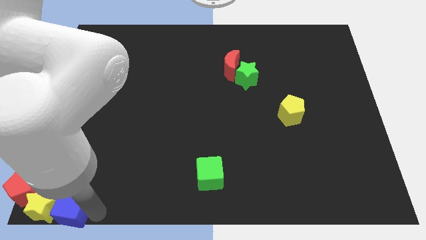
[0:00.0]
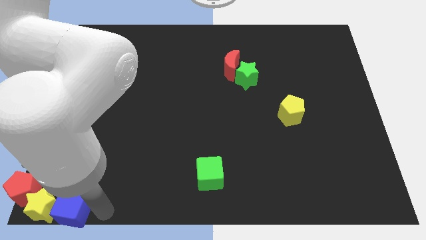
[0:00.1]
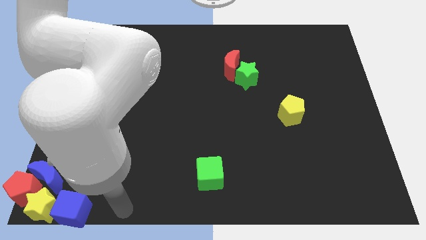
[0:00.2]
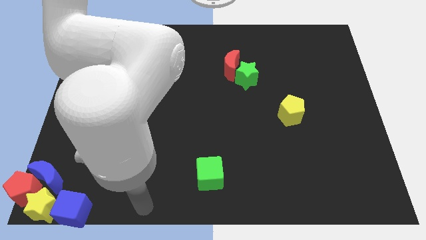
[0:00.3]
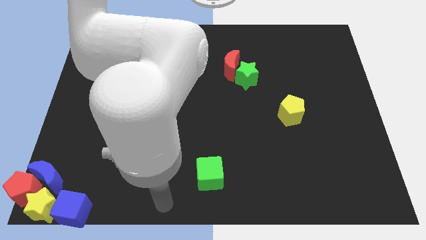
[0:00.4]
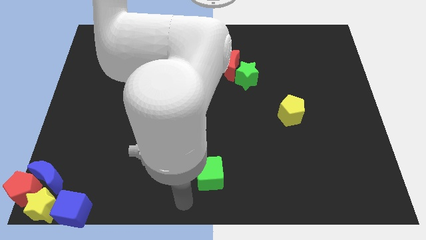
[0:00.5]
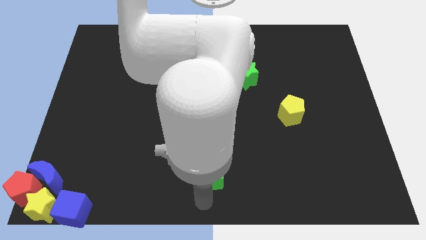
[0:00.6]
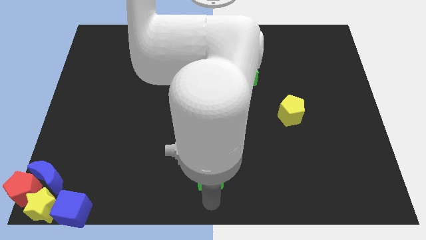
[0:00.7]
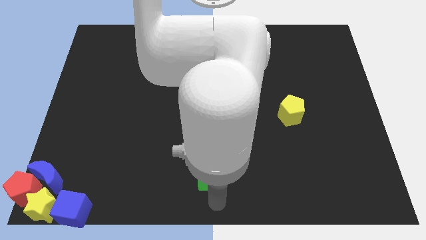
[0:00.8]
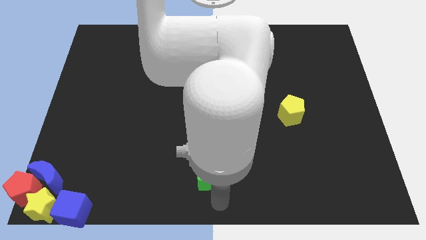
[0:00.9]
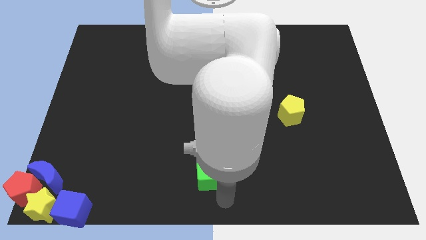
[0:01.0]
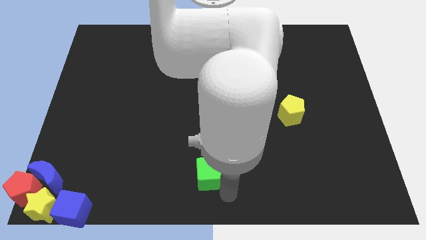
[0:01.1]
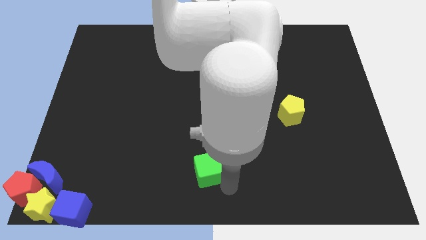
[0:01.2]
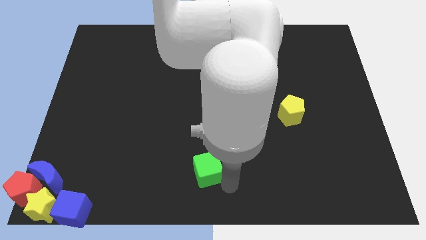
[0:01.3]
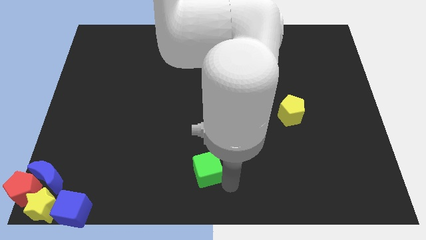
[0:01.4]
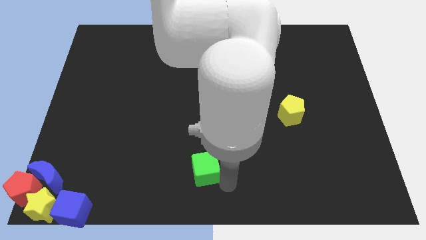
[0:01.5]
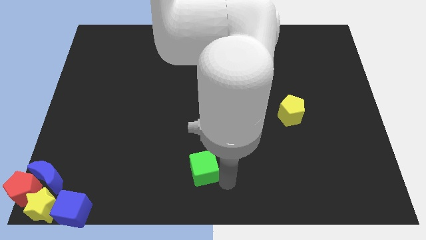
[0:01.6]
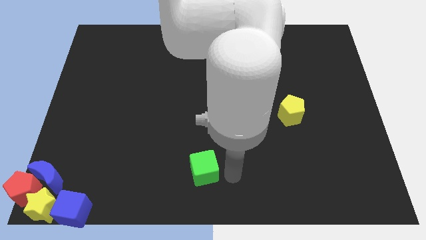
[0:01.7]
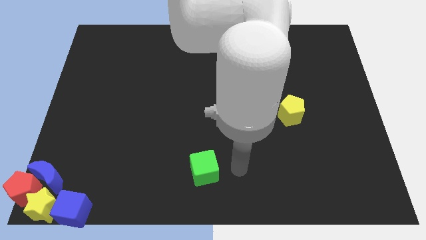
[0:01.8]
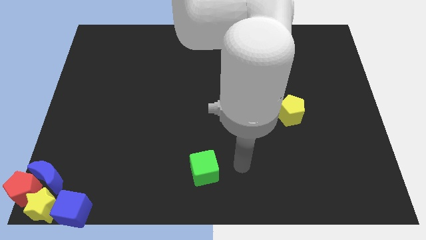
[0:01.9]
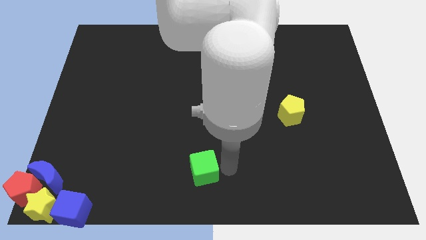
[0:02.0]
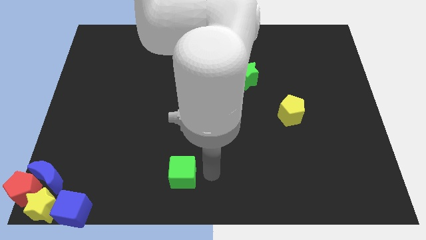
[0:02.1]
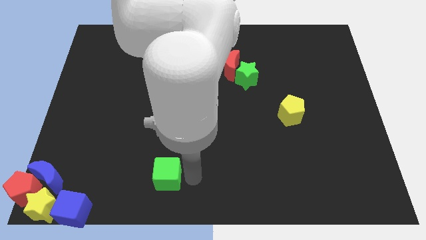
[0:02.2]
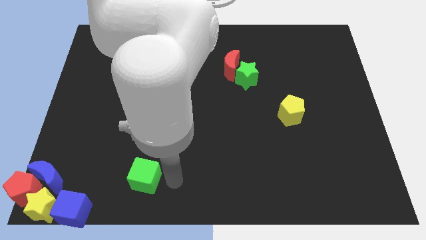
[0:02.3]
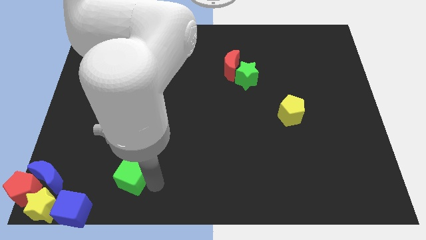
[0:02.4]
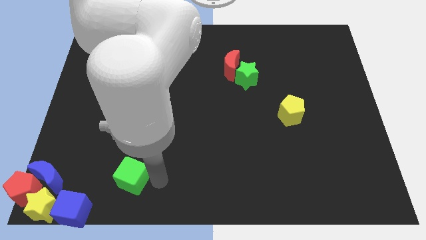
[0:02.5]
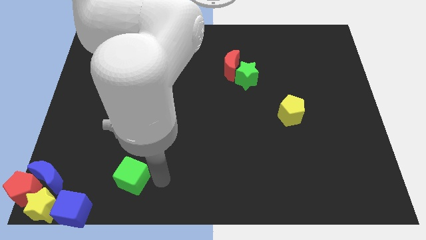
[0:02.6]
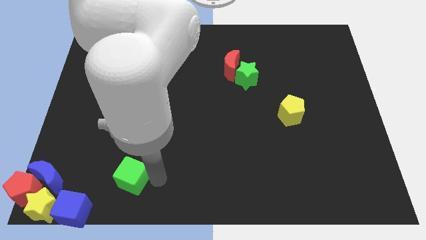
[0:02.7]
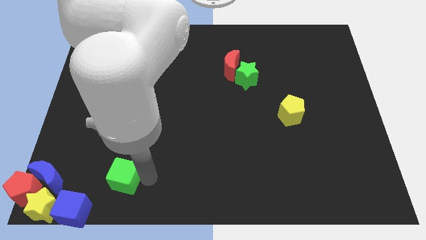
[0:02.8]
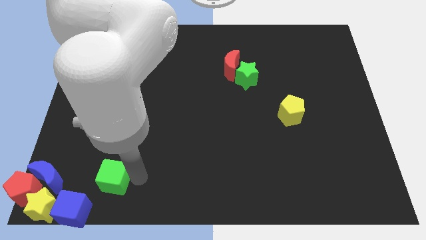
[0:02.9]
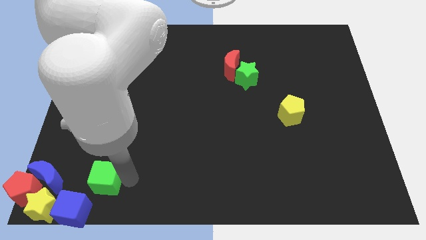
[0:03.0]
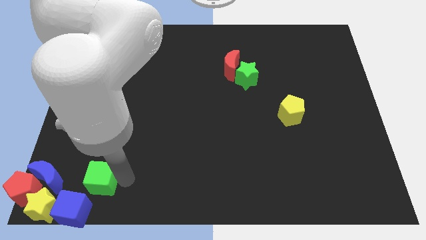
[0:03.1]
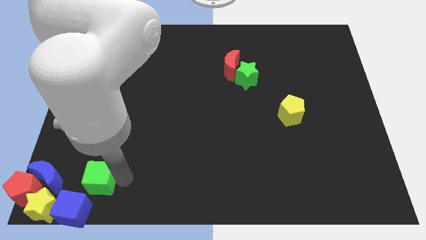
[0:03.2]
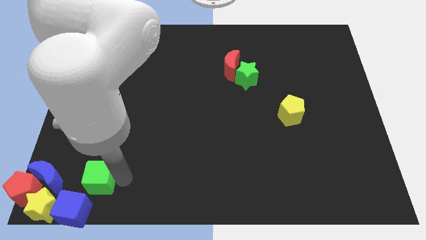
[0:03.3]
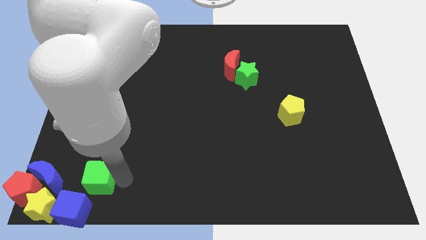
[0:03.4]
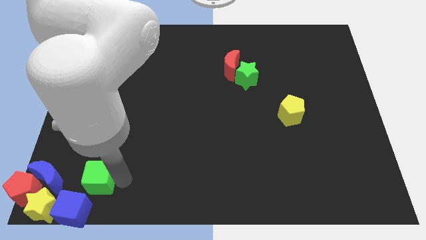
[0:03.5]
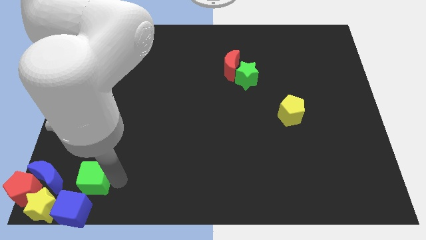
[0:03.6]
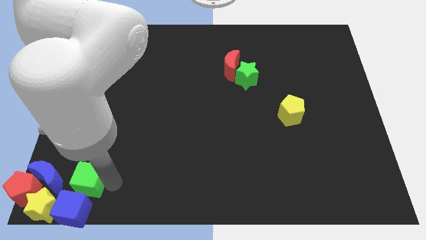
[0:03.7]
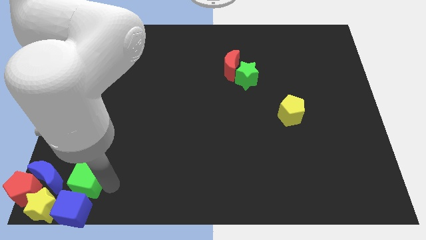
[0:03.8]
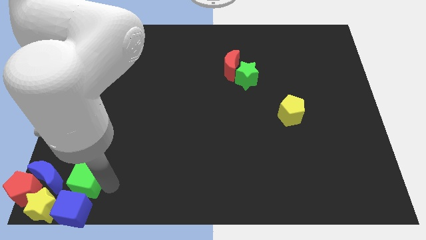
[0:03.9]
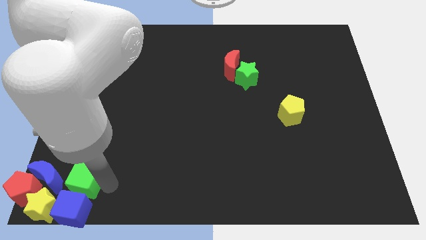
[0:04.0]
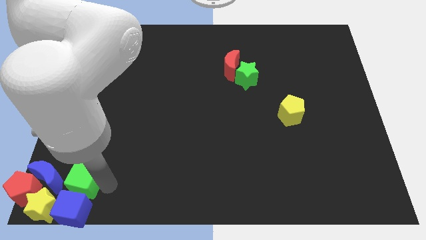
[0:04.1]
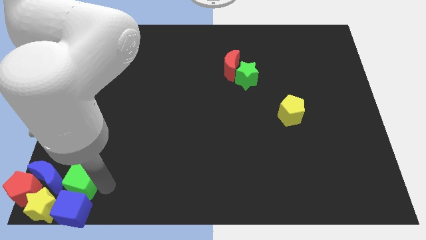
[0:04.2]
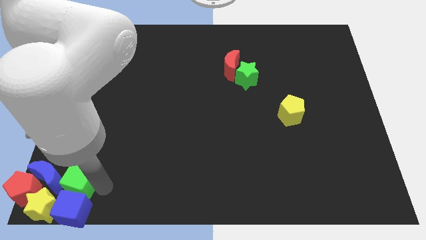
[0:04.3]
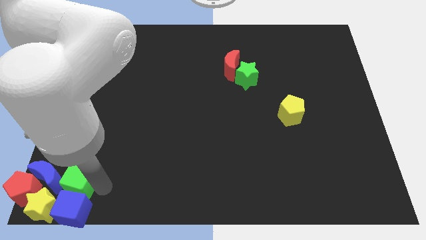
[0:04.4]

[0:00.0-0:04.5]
slide the green cube into the top side of the blue cube

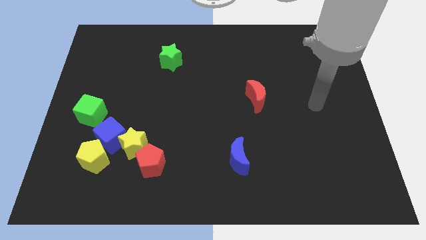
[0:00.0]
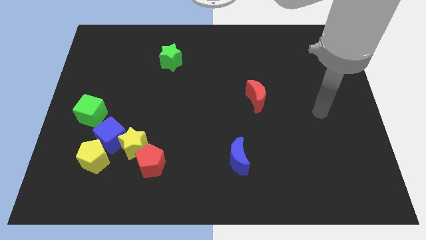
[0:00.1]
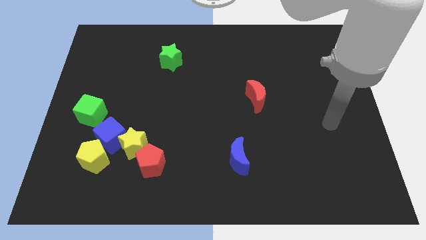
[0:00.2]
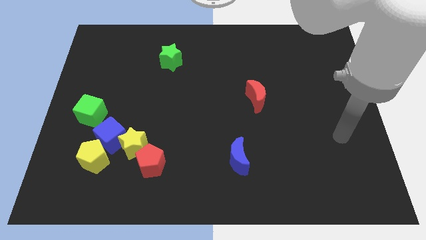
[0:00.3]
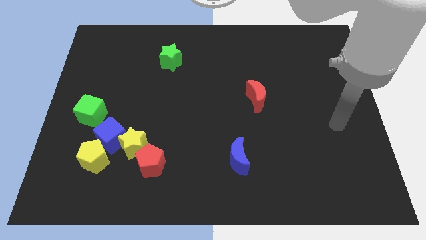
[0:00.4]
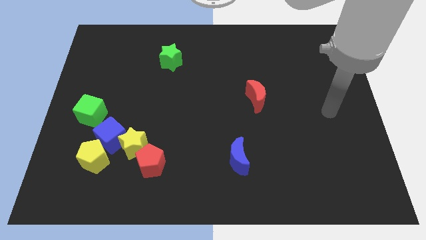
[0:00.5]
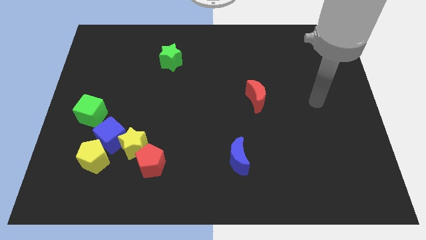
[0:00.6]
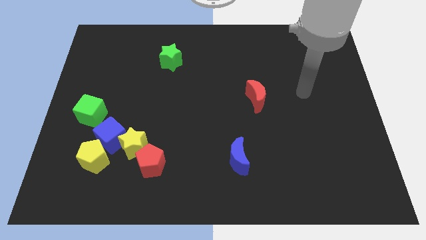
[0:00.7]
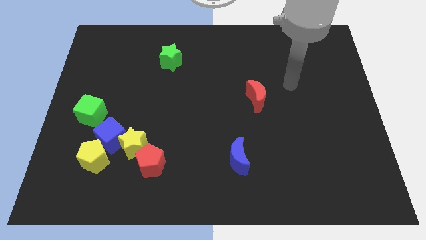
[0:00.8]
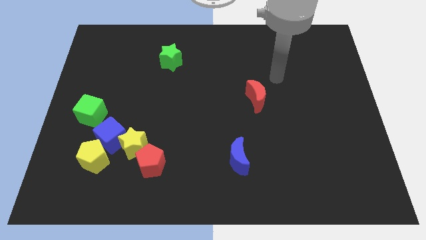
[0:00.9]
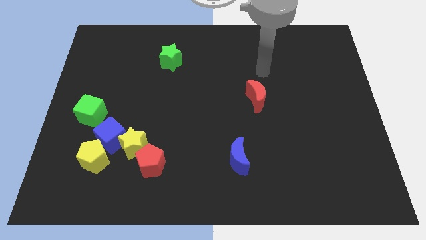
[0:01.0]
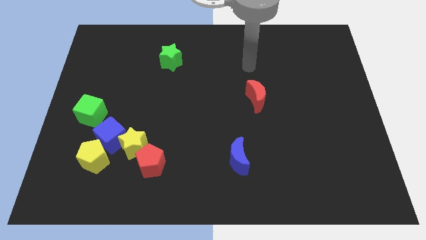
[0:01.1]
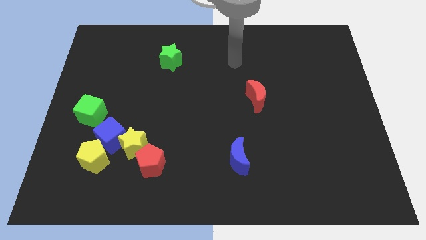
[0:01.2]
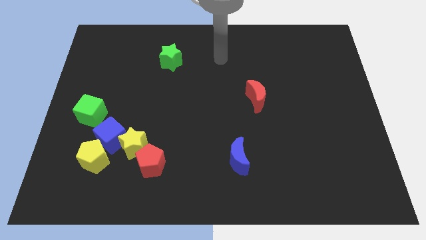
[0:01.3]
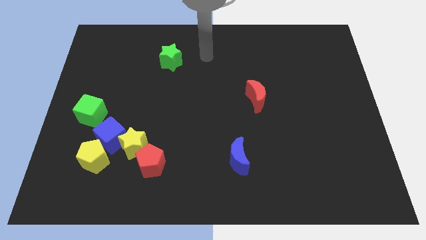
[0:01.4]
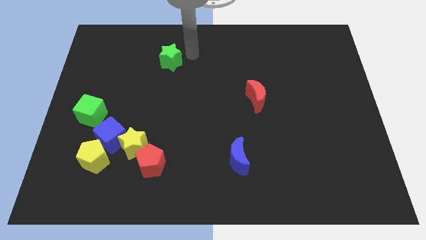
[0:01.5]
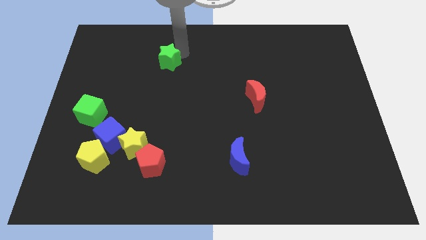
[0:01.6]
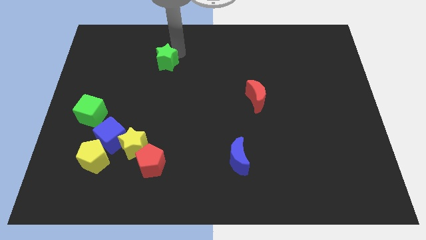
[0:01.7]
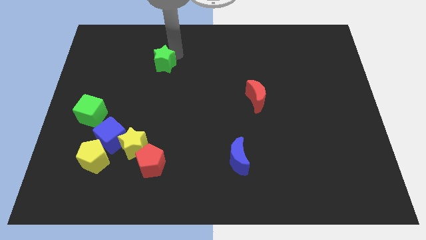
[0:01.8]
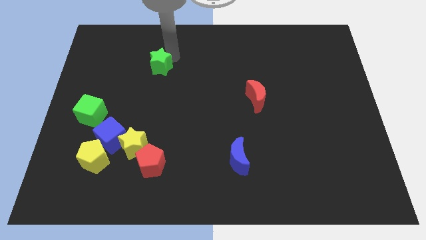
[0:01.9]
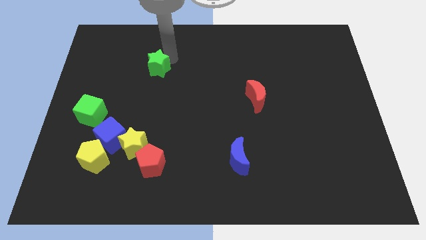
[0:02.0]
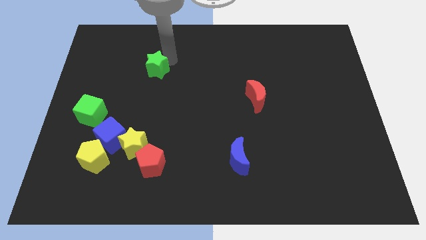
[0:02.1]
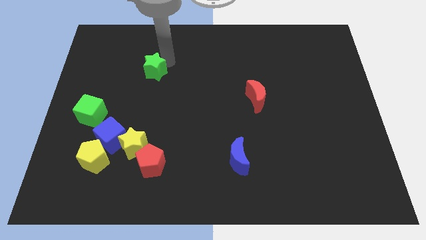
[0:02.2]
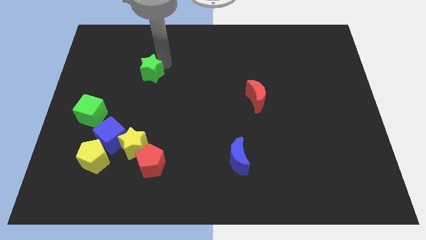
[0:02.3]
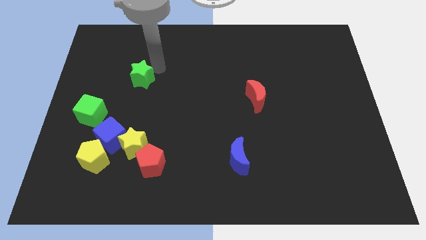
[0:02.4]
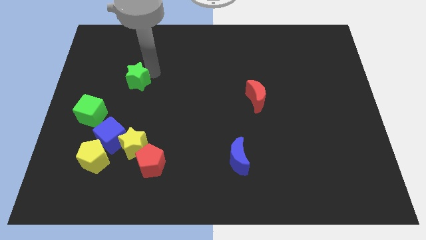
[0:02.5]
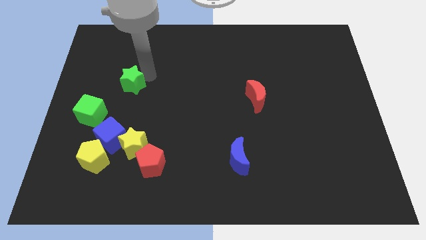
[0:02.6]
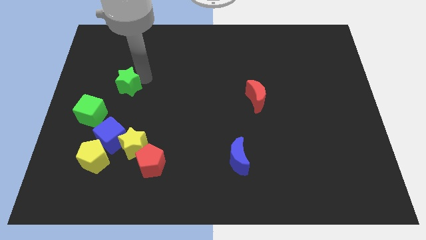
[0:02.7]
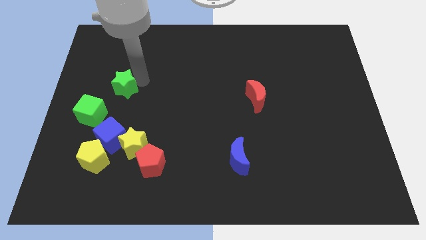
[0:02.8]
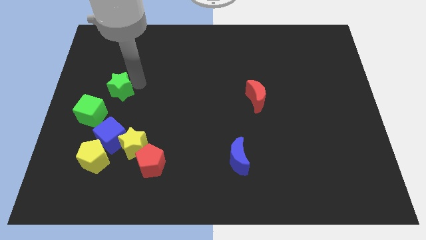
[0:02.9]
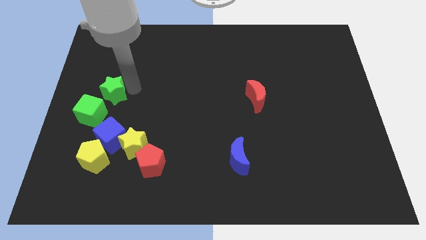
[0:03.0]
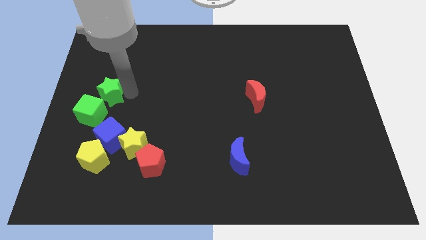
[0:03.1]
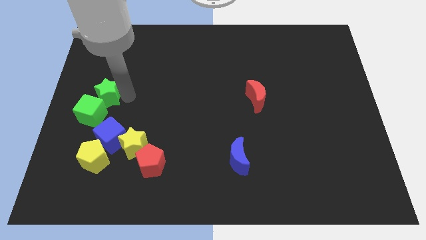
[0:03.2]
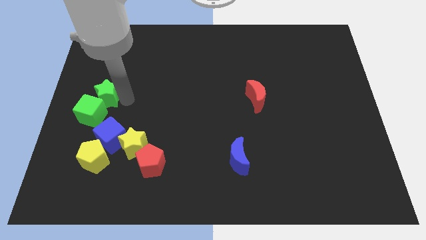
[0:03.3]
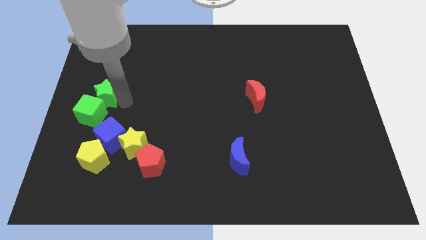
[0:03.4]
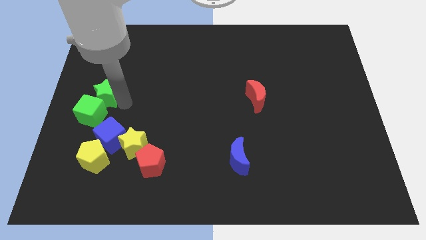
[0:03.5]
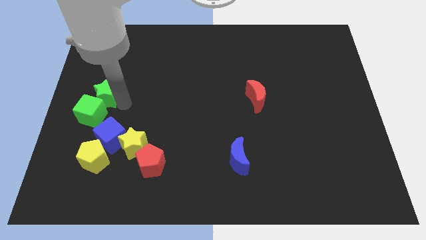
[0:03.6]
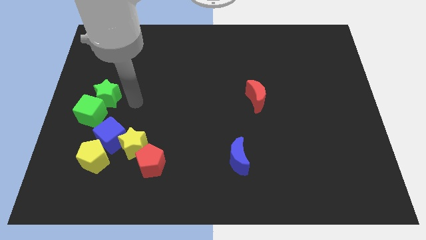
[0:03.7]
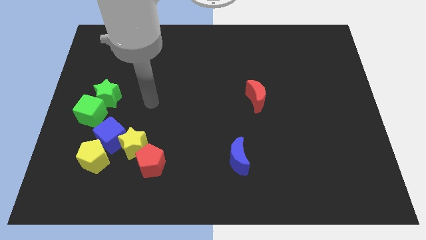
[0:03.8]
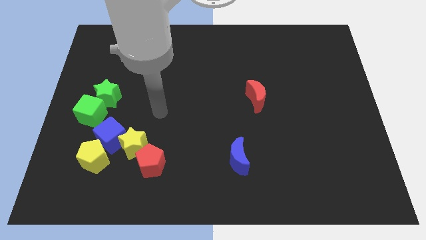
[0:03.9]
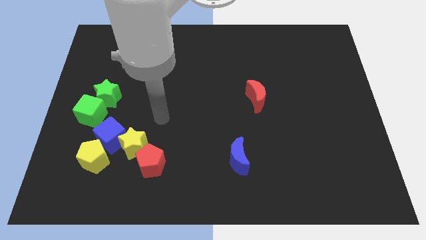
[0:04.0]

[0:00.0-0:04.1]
put the green blocks together at the left side of the table

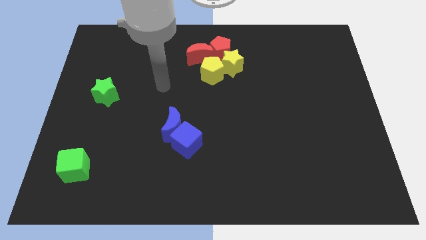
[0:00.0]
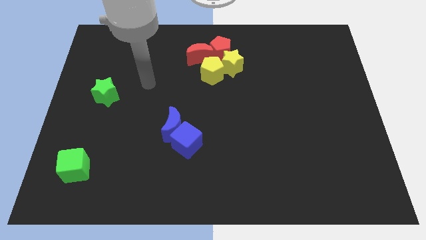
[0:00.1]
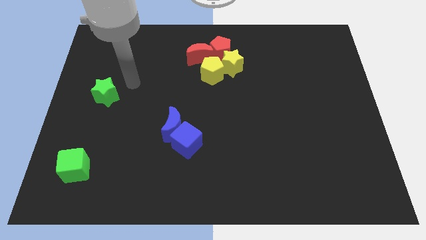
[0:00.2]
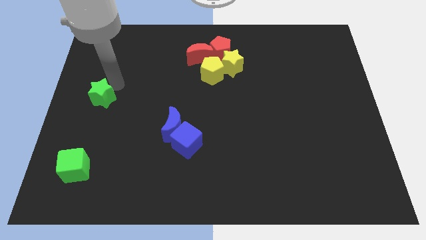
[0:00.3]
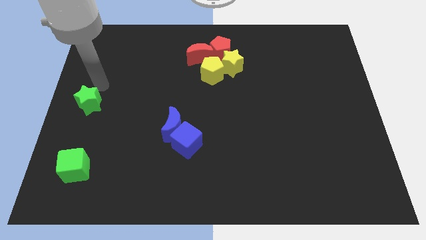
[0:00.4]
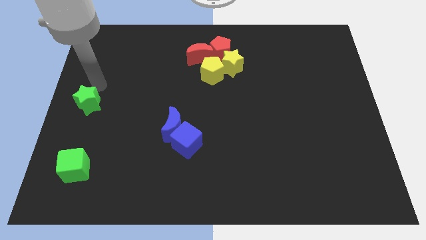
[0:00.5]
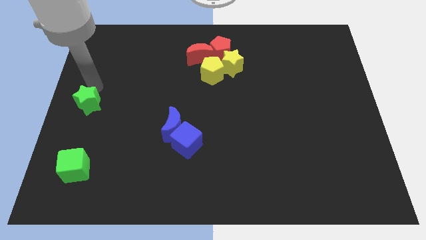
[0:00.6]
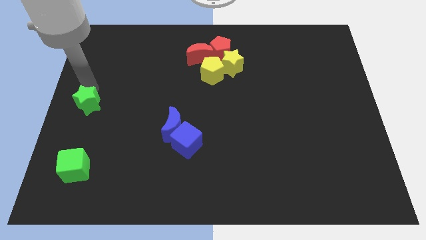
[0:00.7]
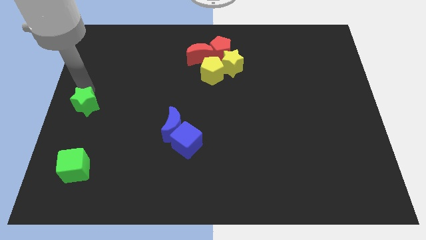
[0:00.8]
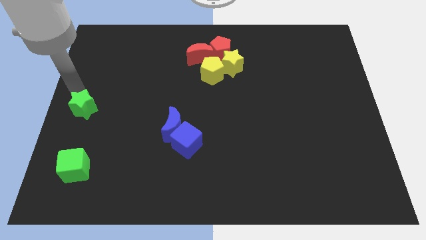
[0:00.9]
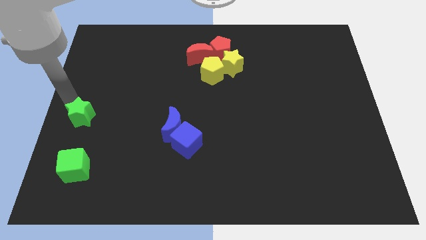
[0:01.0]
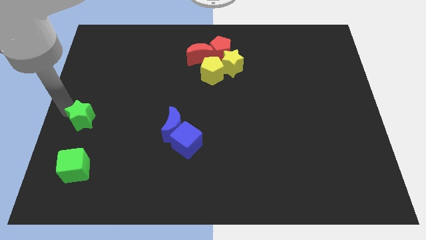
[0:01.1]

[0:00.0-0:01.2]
move the green star towards the center left
